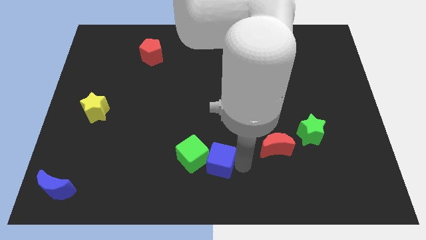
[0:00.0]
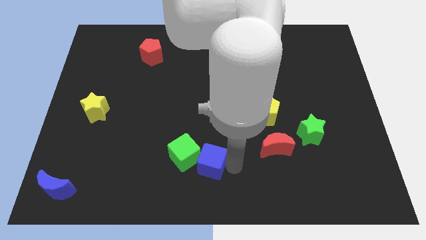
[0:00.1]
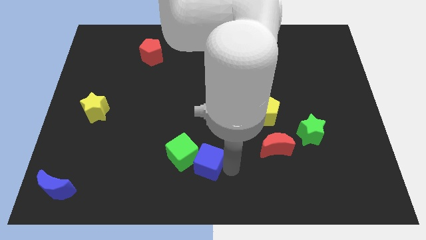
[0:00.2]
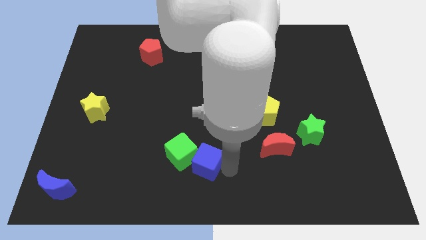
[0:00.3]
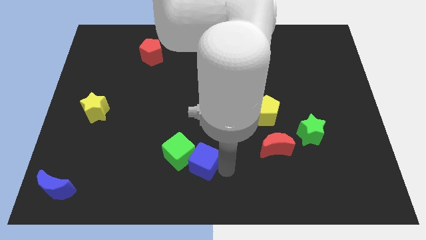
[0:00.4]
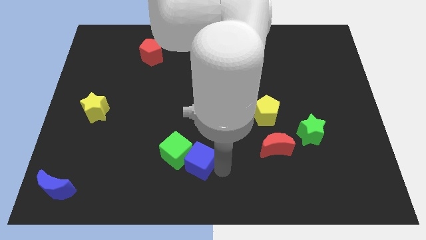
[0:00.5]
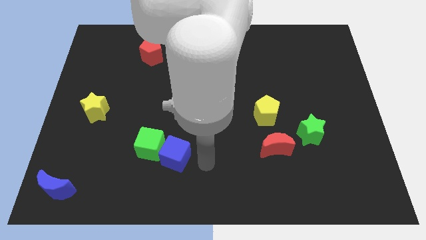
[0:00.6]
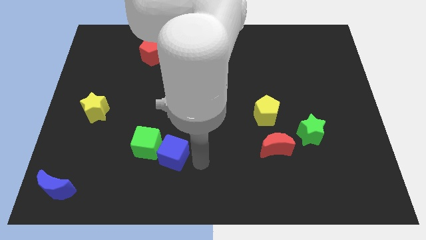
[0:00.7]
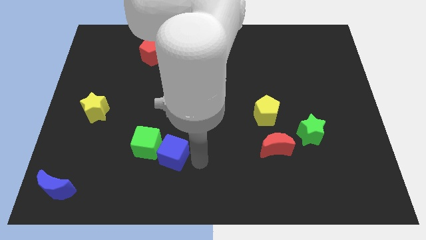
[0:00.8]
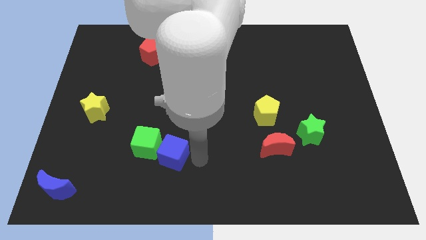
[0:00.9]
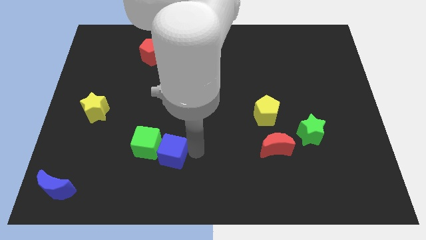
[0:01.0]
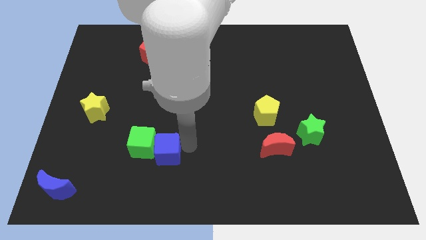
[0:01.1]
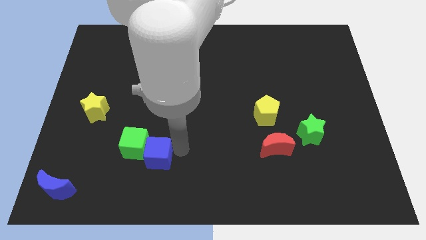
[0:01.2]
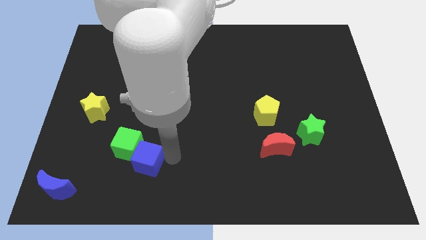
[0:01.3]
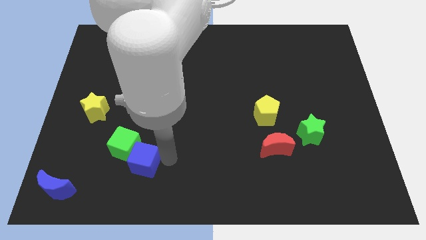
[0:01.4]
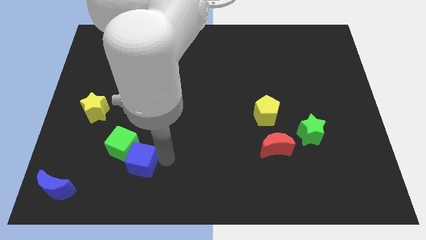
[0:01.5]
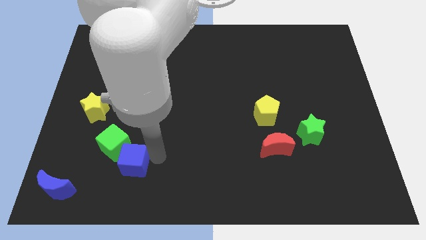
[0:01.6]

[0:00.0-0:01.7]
push the cubes towards the left side of the board

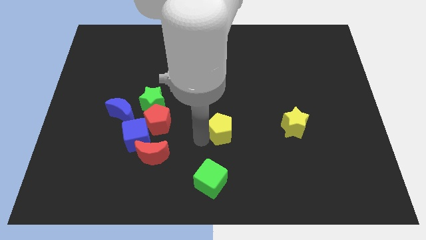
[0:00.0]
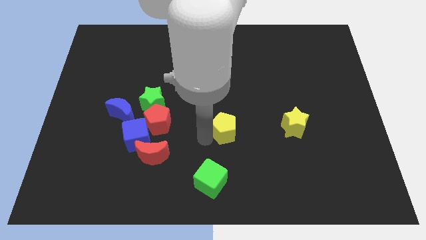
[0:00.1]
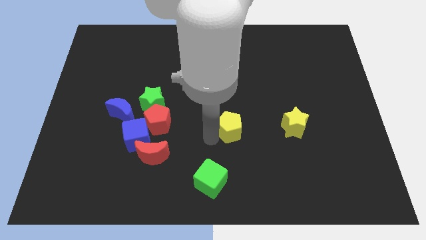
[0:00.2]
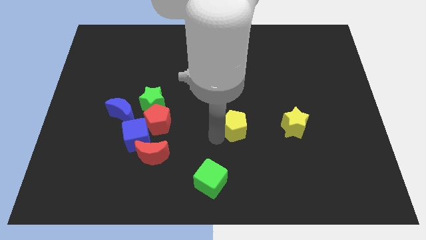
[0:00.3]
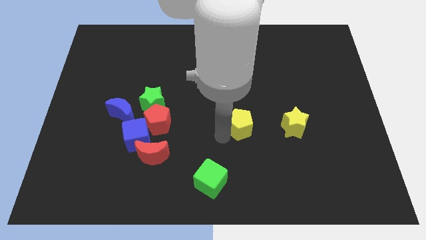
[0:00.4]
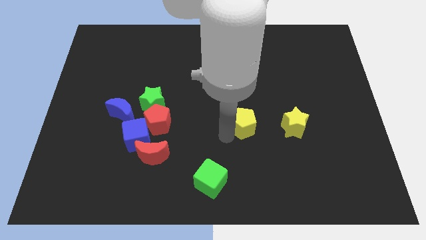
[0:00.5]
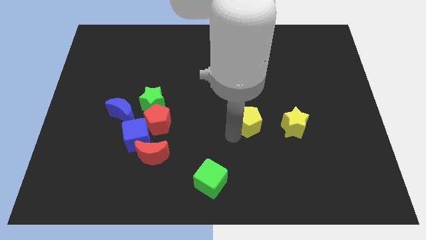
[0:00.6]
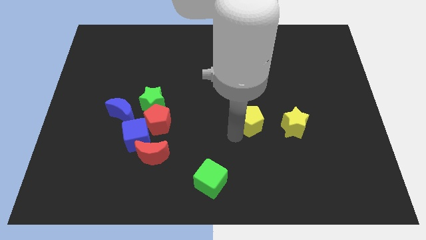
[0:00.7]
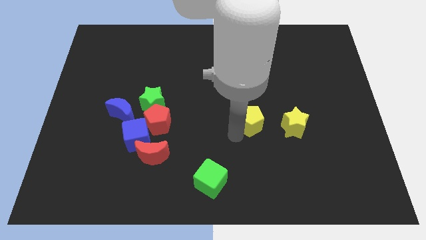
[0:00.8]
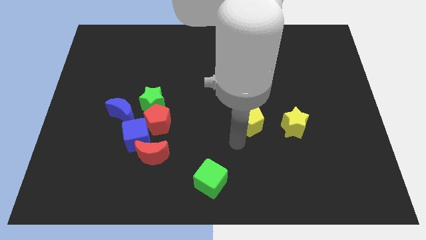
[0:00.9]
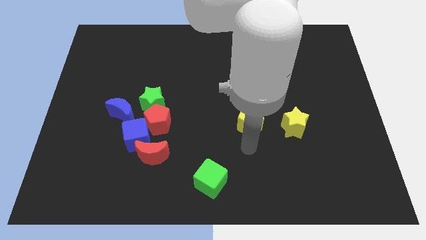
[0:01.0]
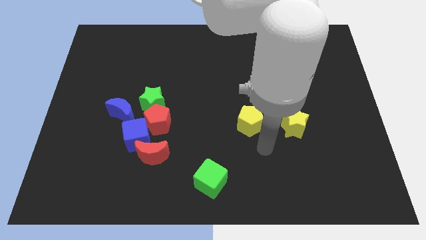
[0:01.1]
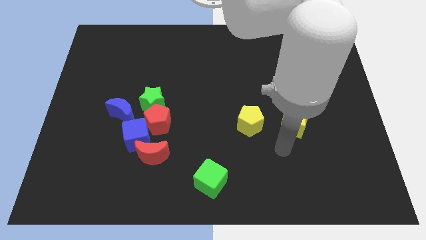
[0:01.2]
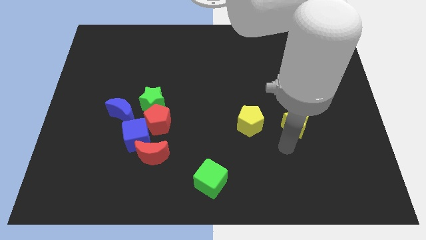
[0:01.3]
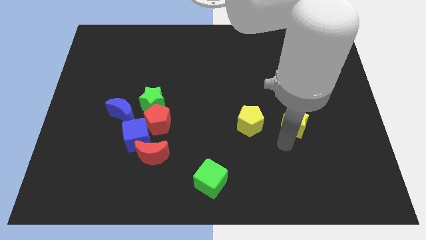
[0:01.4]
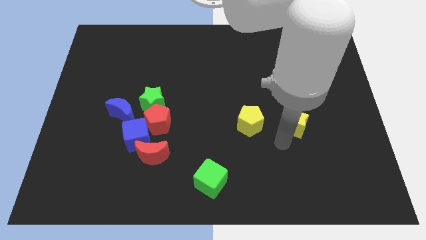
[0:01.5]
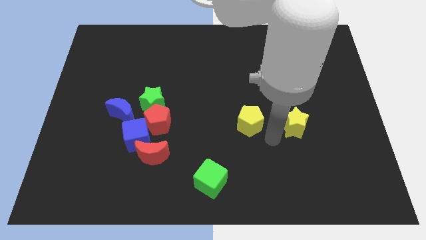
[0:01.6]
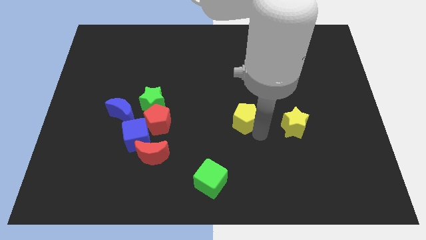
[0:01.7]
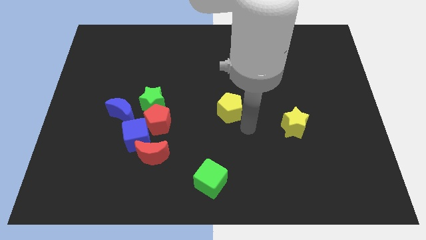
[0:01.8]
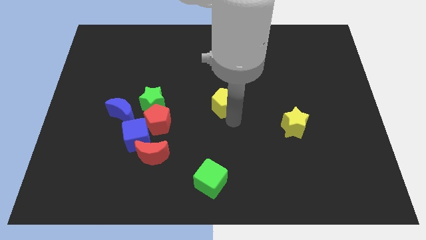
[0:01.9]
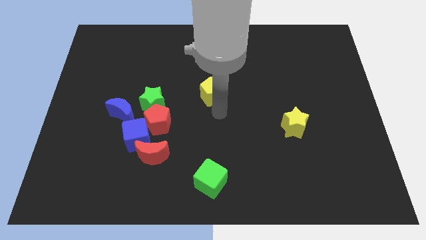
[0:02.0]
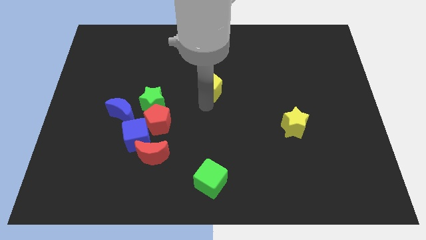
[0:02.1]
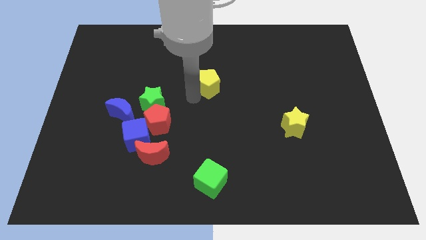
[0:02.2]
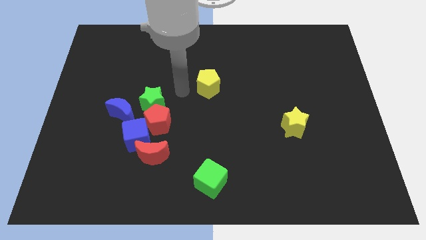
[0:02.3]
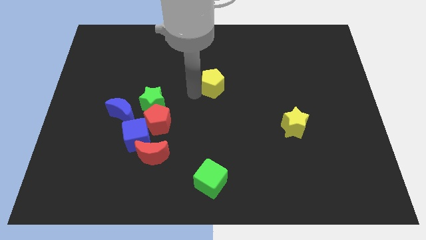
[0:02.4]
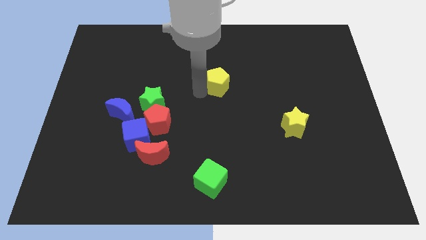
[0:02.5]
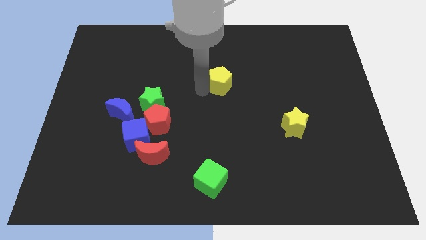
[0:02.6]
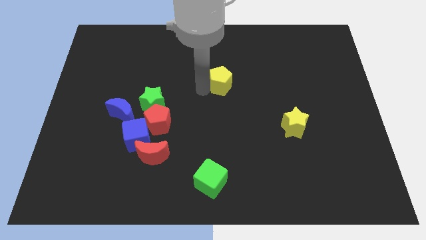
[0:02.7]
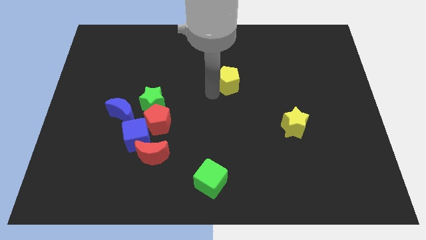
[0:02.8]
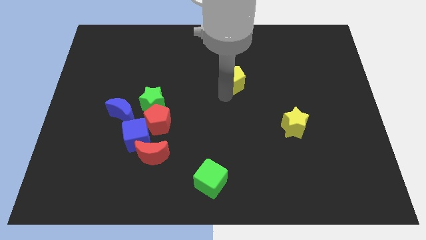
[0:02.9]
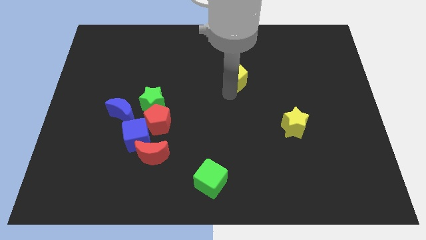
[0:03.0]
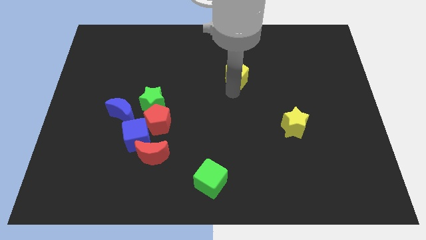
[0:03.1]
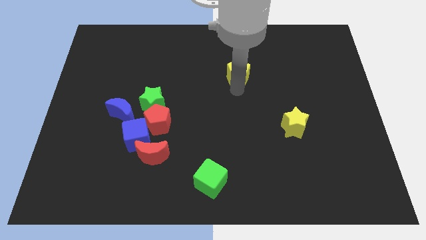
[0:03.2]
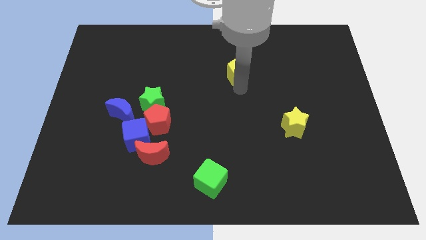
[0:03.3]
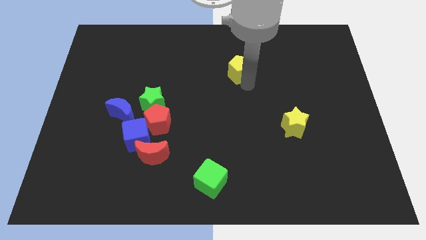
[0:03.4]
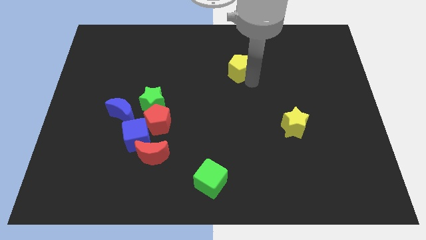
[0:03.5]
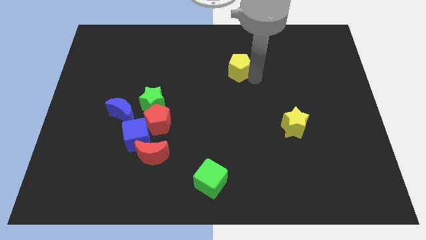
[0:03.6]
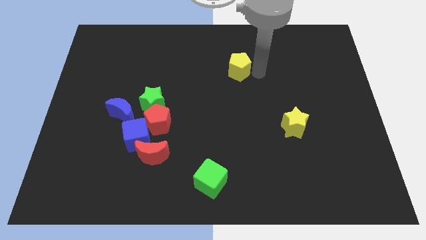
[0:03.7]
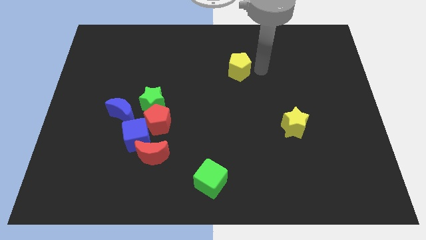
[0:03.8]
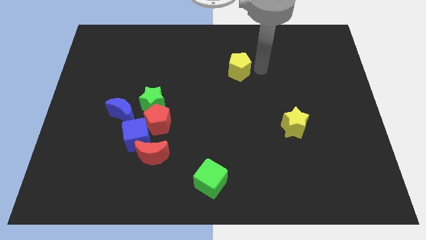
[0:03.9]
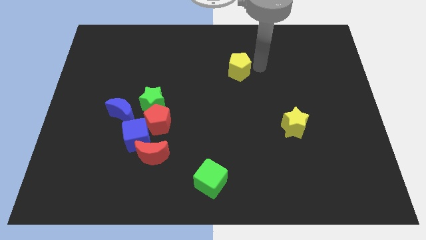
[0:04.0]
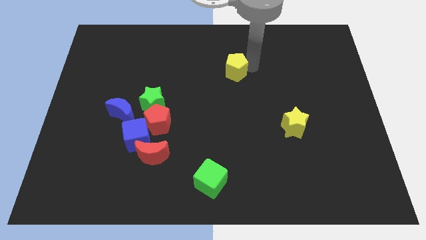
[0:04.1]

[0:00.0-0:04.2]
push the yellow pentagon towards top

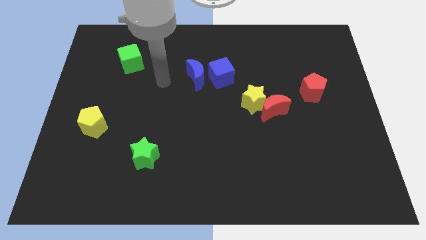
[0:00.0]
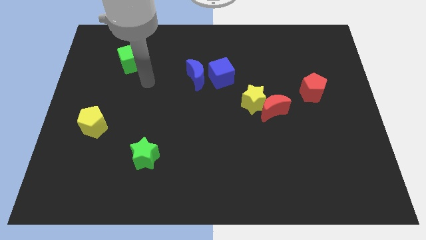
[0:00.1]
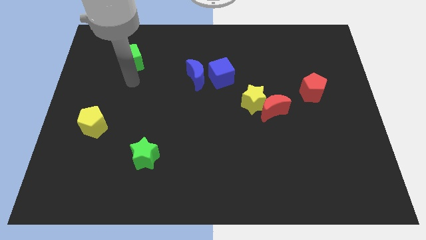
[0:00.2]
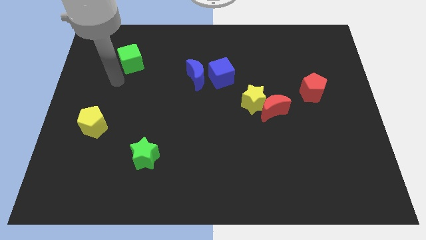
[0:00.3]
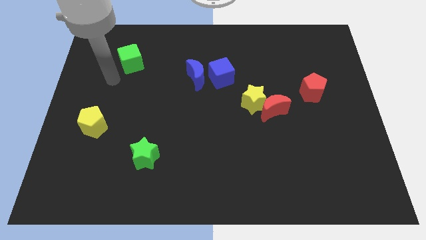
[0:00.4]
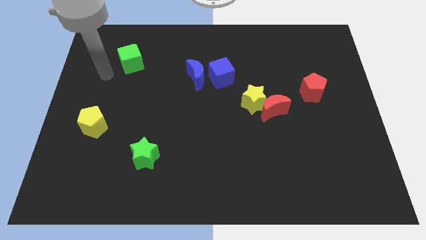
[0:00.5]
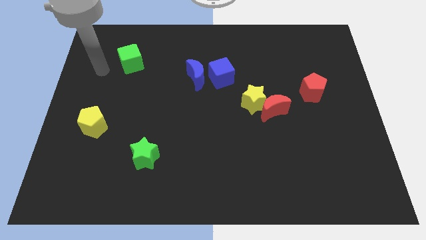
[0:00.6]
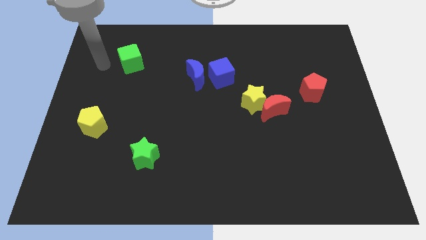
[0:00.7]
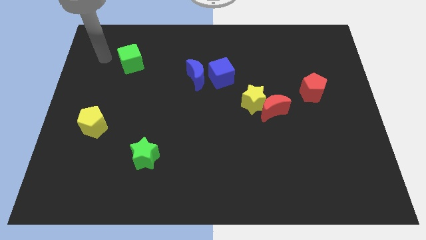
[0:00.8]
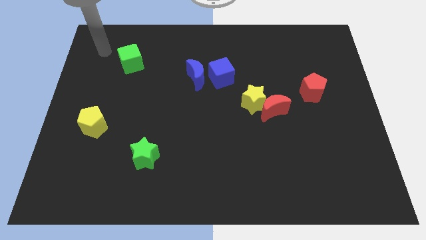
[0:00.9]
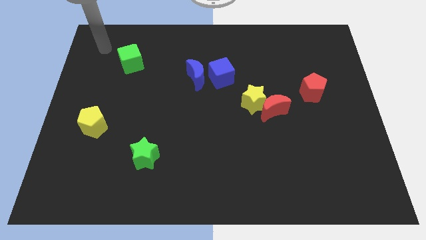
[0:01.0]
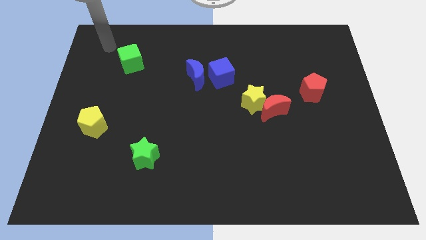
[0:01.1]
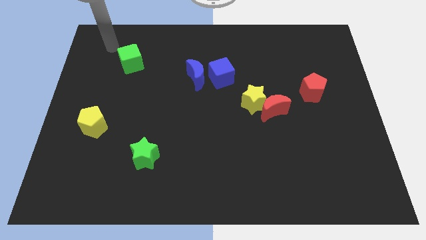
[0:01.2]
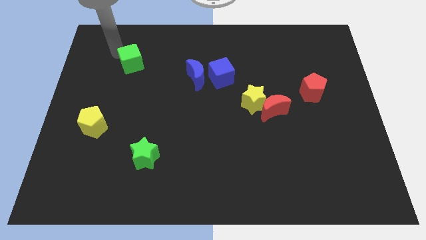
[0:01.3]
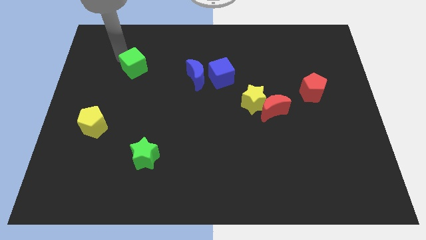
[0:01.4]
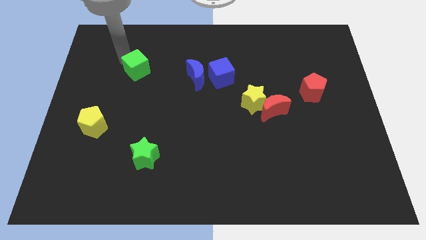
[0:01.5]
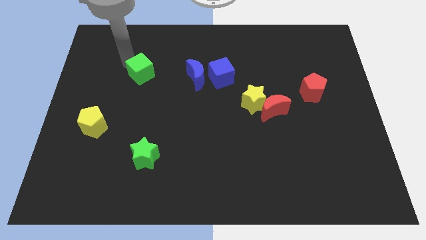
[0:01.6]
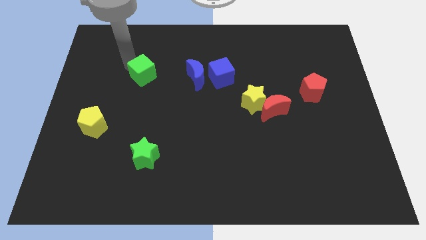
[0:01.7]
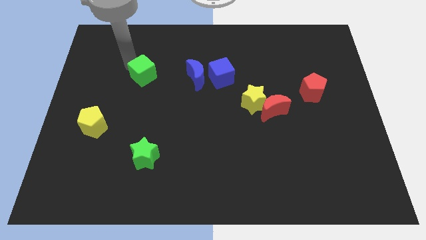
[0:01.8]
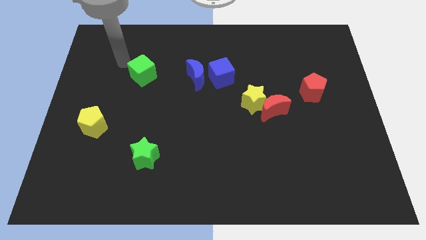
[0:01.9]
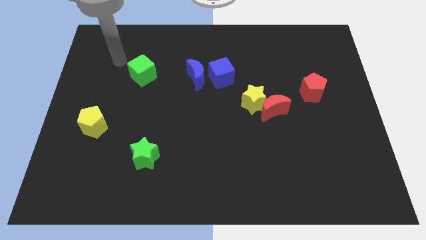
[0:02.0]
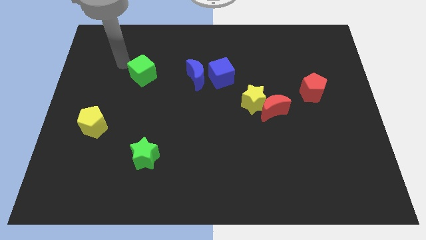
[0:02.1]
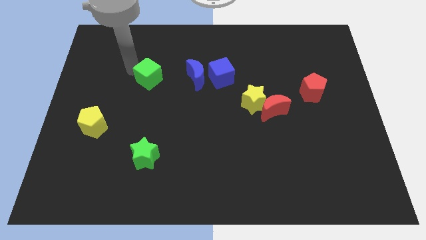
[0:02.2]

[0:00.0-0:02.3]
move the green cube towards the blue crescent

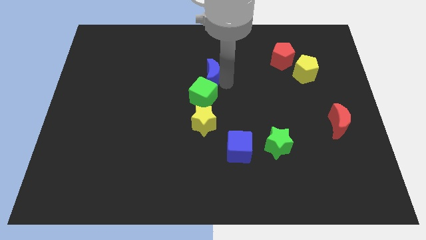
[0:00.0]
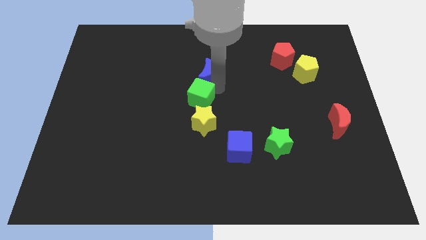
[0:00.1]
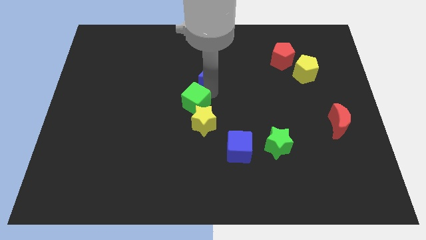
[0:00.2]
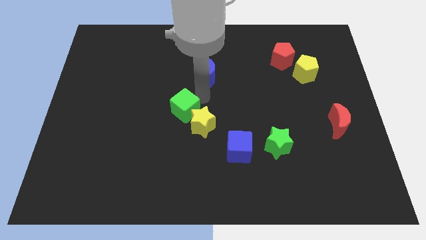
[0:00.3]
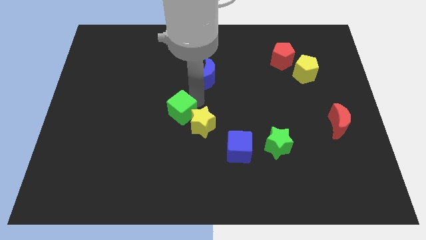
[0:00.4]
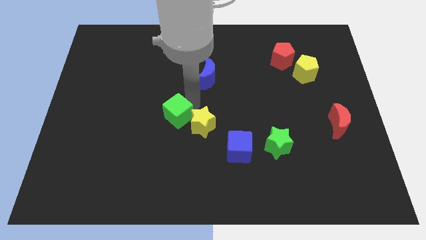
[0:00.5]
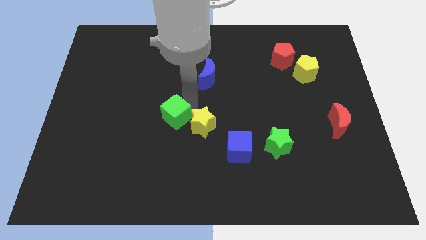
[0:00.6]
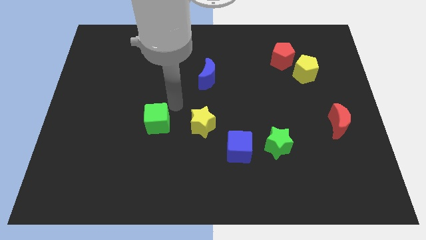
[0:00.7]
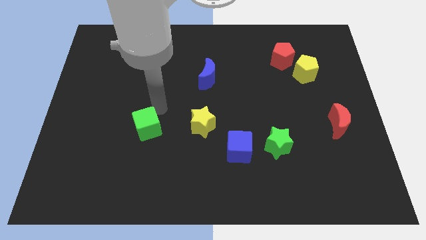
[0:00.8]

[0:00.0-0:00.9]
place the green cube left to the yellow star
